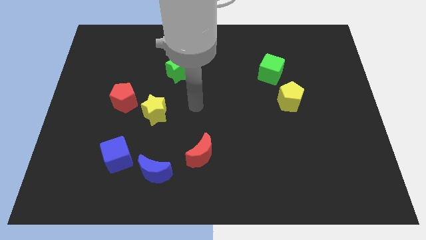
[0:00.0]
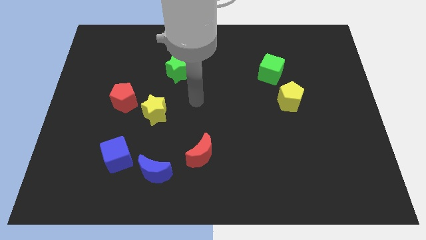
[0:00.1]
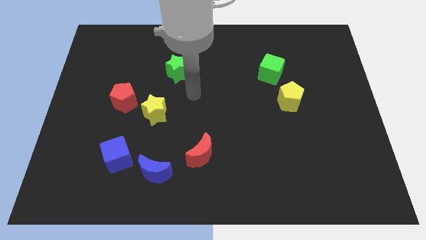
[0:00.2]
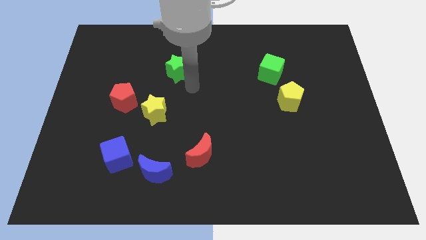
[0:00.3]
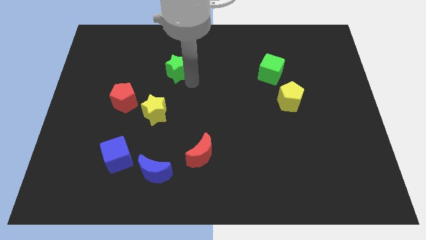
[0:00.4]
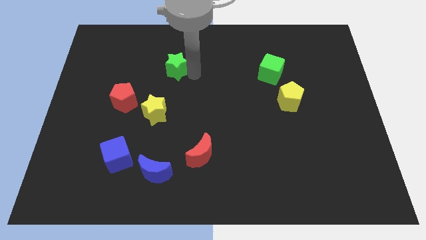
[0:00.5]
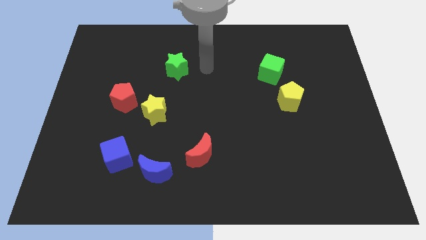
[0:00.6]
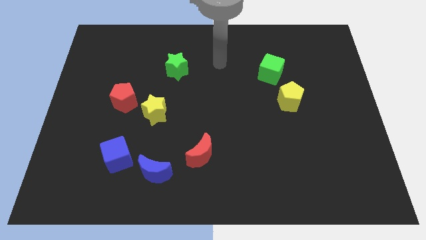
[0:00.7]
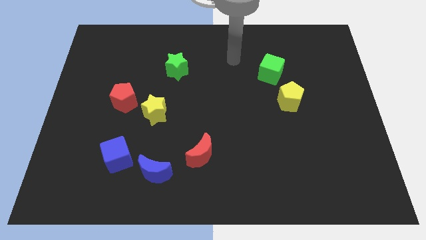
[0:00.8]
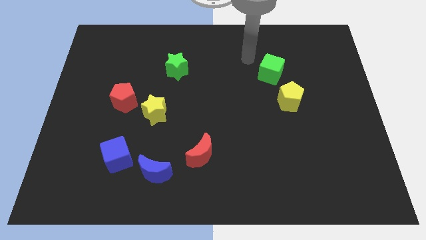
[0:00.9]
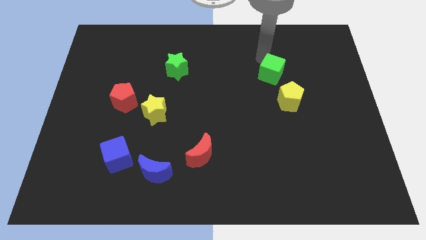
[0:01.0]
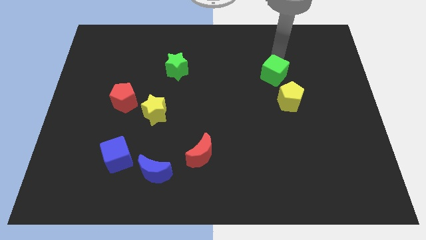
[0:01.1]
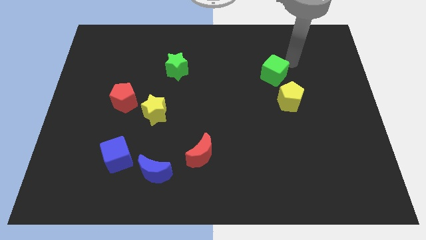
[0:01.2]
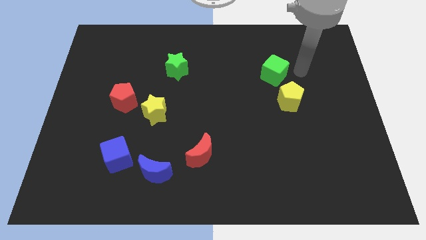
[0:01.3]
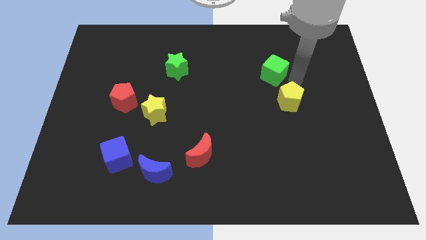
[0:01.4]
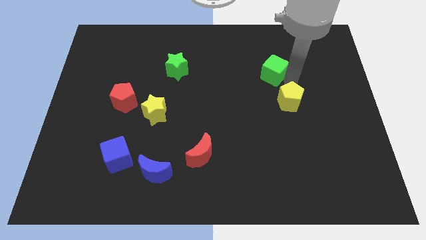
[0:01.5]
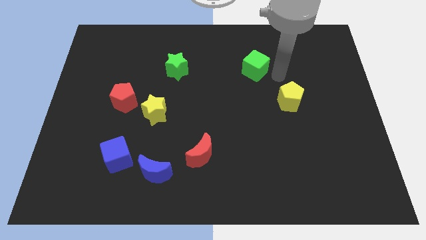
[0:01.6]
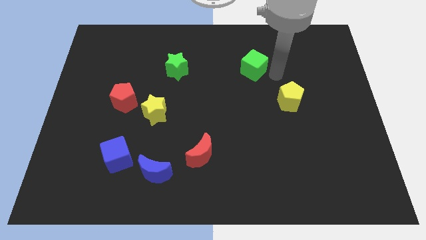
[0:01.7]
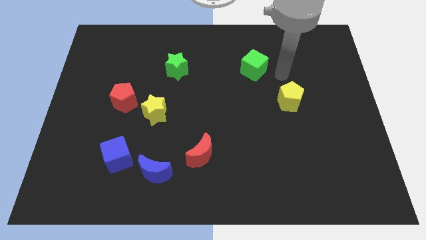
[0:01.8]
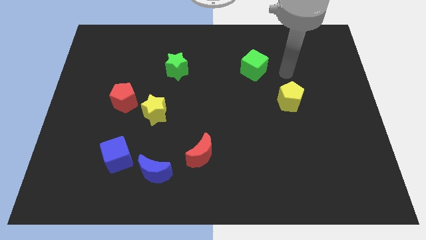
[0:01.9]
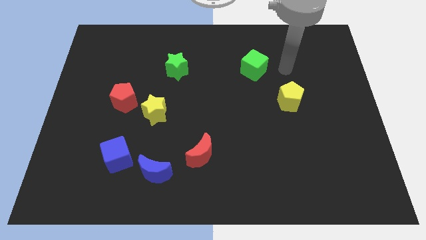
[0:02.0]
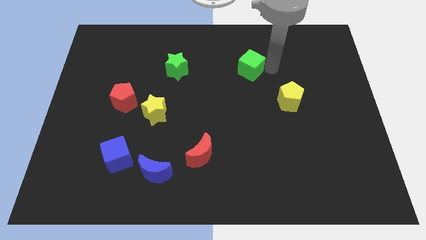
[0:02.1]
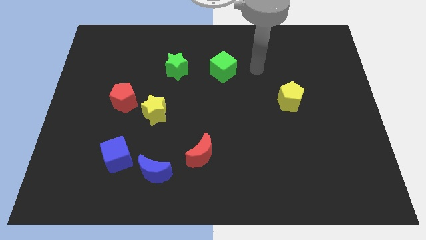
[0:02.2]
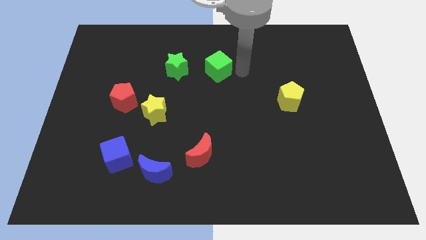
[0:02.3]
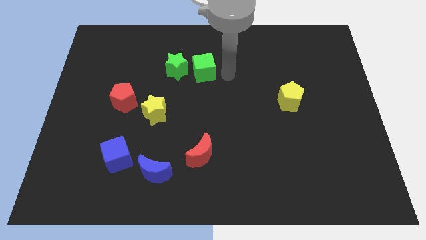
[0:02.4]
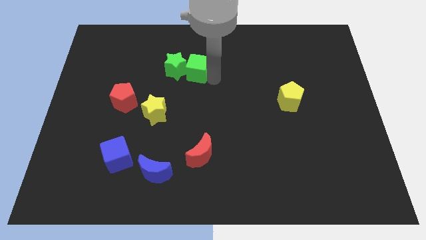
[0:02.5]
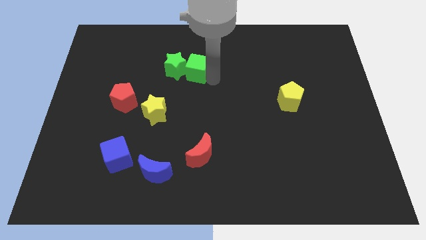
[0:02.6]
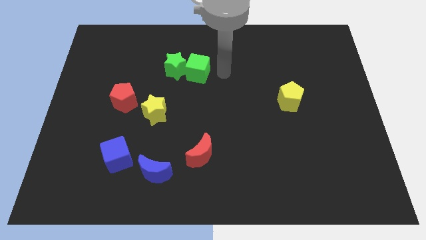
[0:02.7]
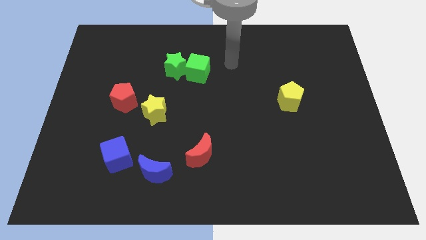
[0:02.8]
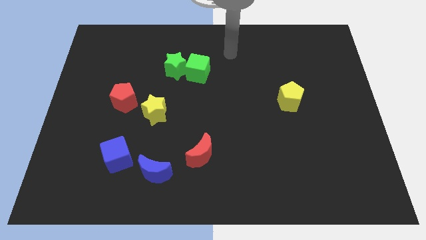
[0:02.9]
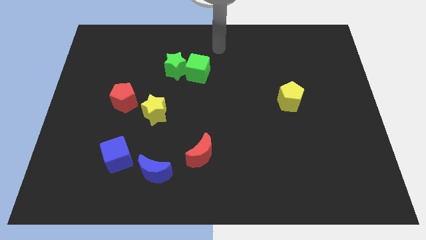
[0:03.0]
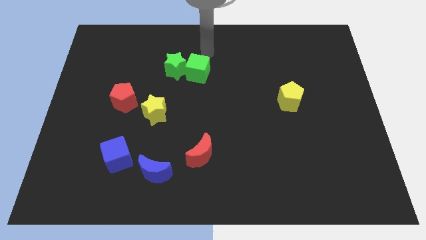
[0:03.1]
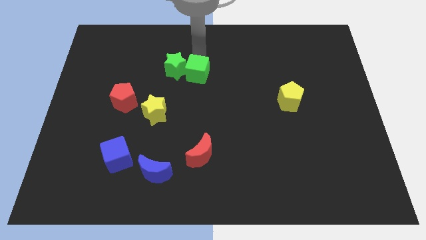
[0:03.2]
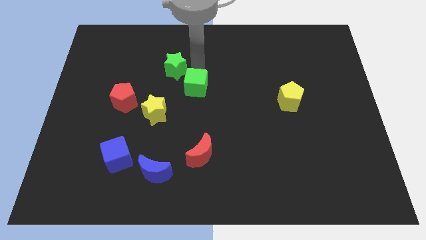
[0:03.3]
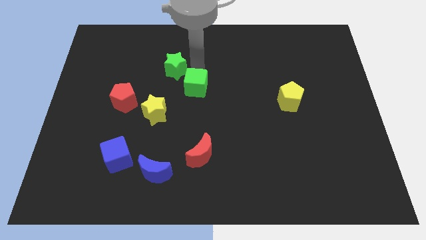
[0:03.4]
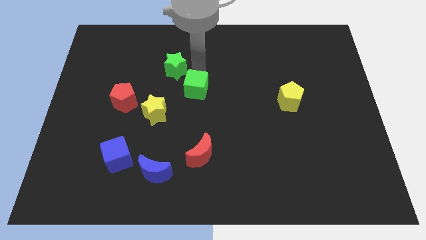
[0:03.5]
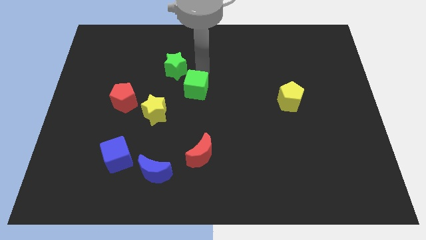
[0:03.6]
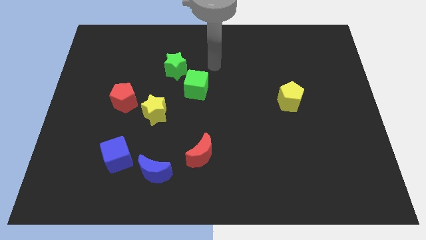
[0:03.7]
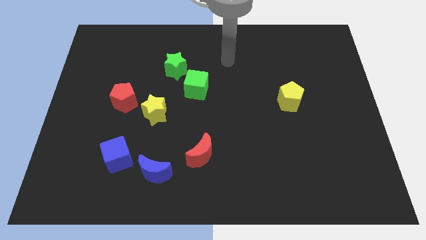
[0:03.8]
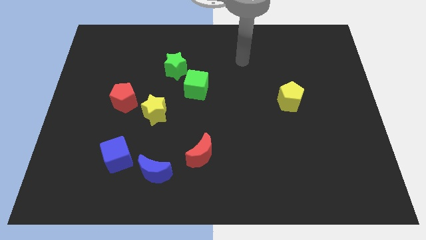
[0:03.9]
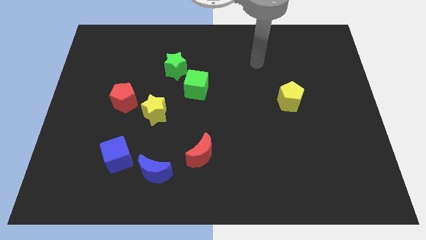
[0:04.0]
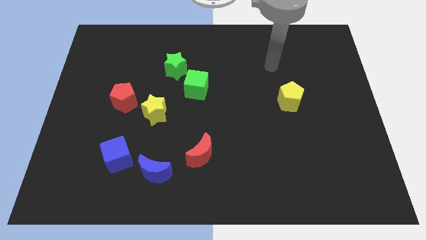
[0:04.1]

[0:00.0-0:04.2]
move green cube to the bottom right of green star

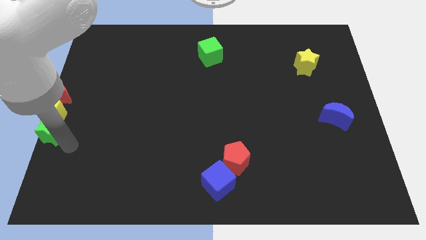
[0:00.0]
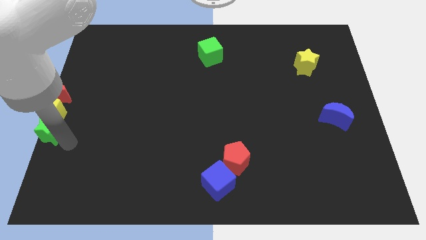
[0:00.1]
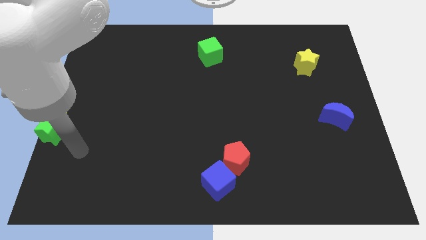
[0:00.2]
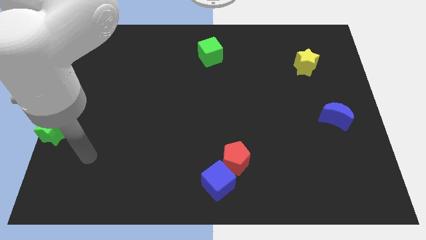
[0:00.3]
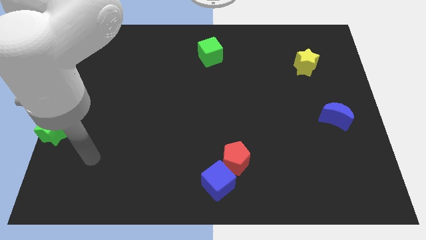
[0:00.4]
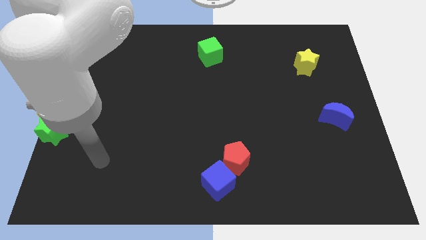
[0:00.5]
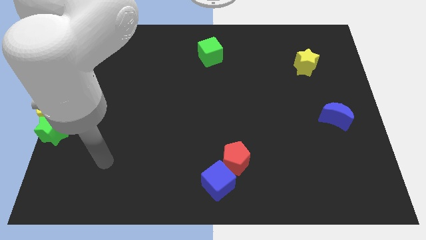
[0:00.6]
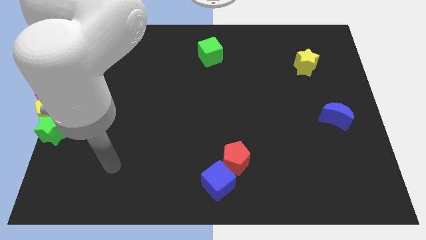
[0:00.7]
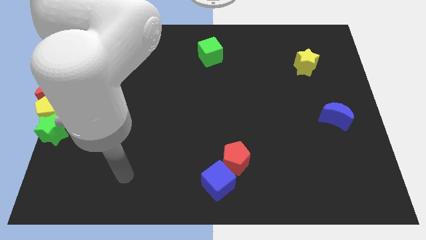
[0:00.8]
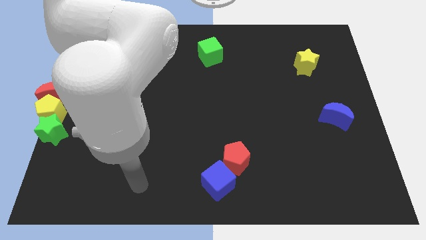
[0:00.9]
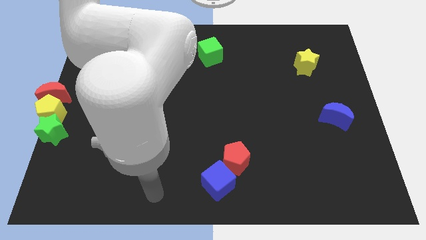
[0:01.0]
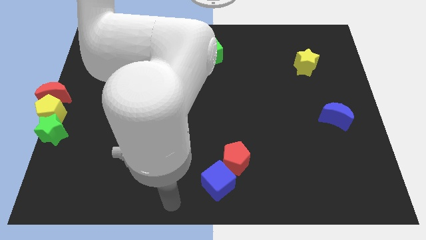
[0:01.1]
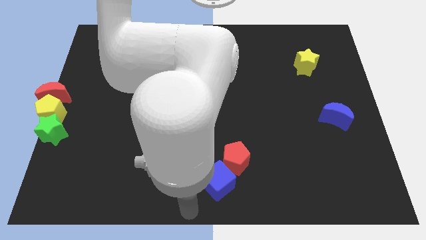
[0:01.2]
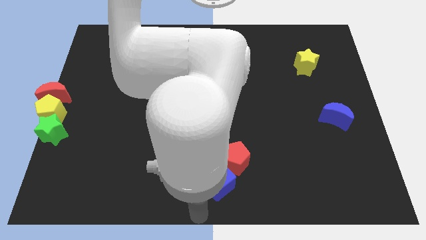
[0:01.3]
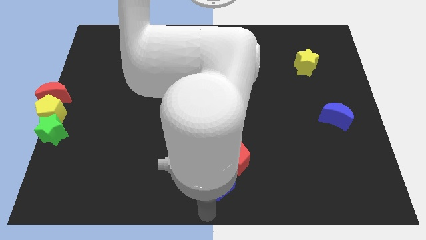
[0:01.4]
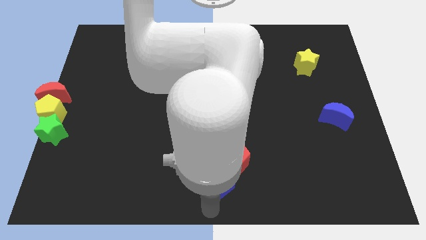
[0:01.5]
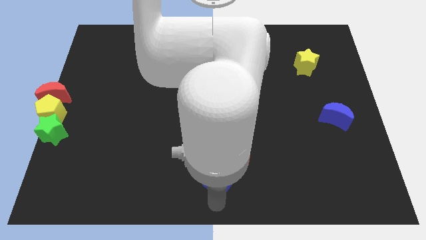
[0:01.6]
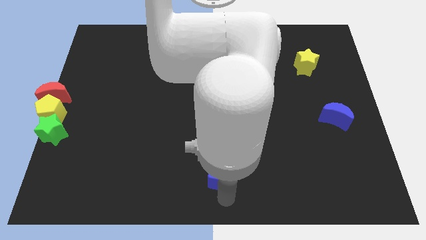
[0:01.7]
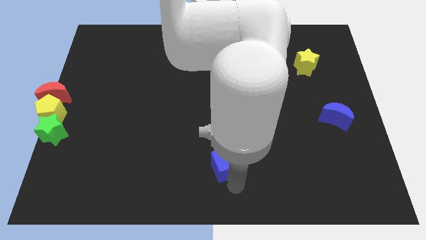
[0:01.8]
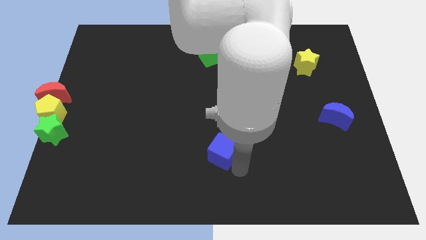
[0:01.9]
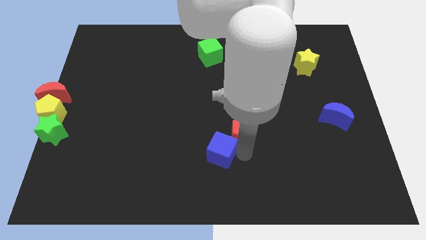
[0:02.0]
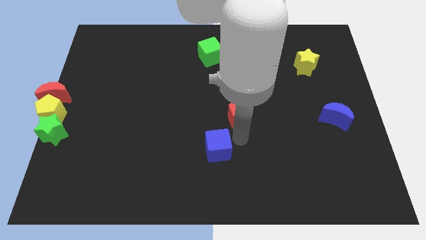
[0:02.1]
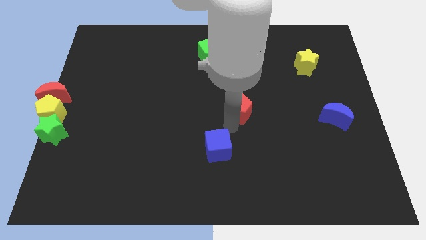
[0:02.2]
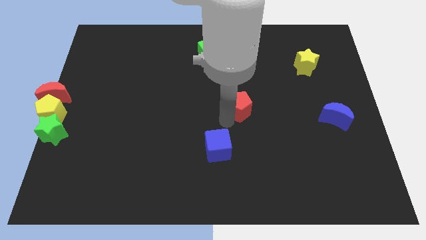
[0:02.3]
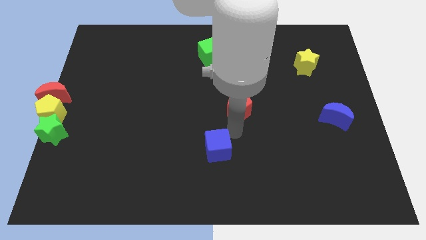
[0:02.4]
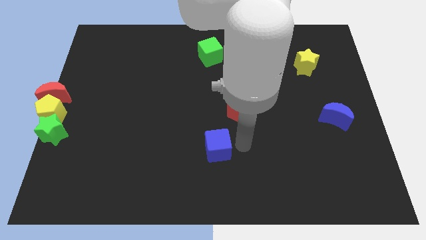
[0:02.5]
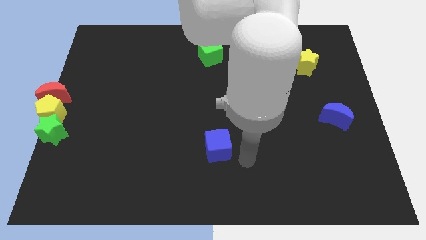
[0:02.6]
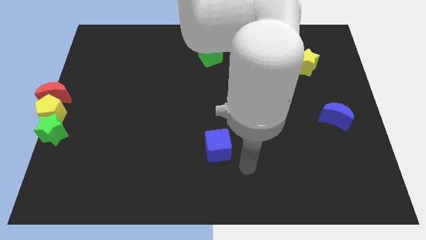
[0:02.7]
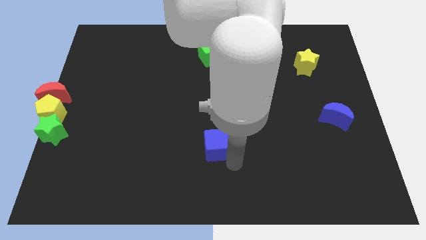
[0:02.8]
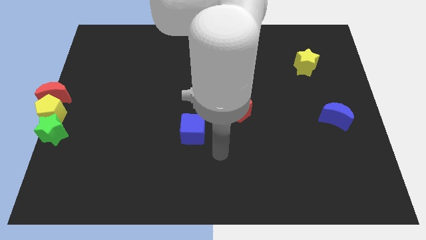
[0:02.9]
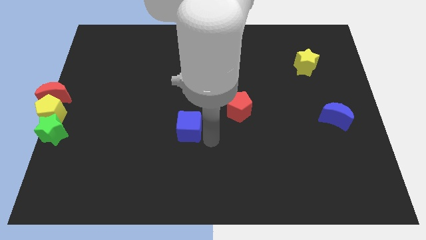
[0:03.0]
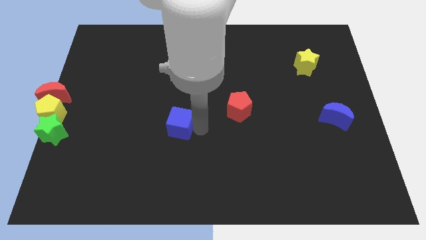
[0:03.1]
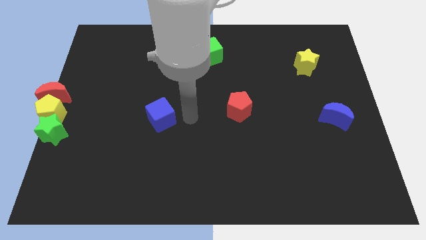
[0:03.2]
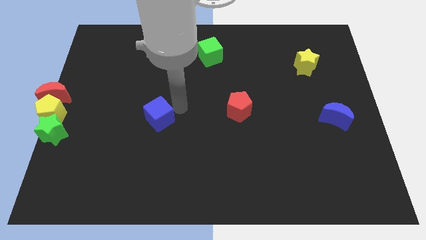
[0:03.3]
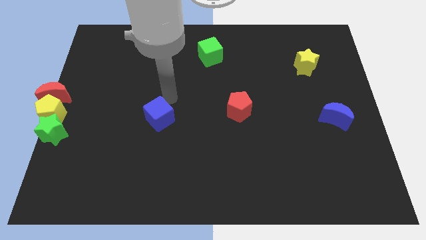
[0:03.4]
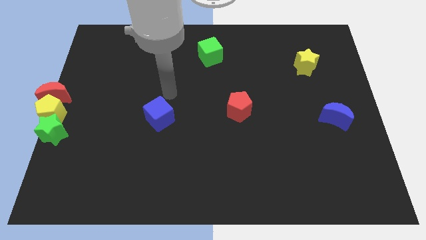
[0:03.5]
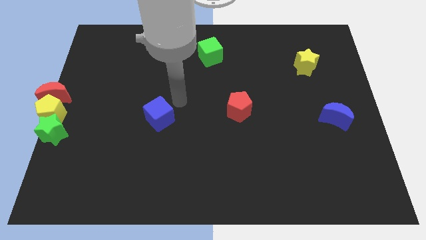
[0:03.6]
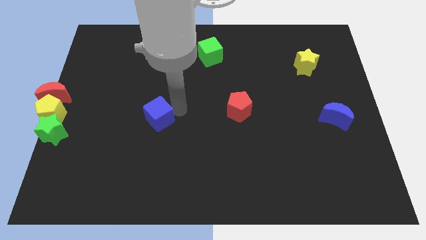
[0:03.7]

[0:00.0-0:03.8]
slide the blue cube to the right side of the vertical line of blocks

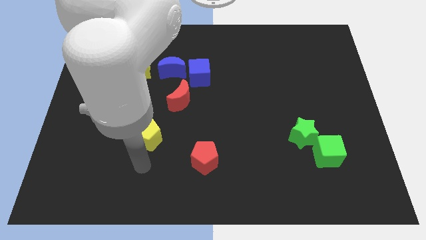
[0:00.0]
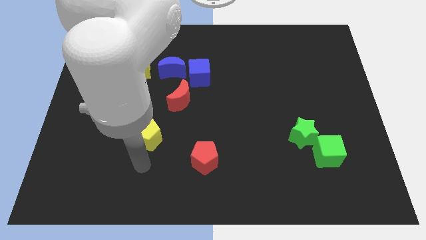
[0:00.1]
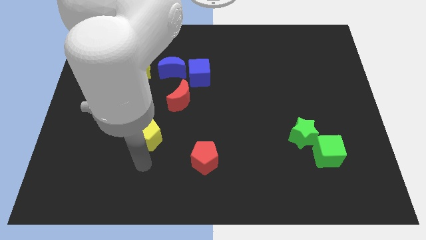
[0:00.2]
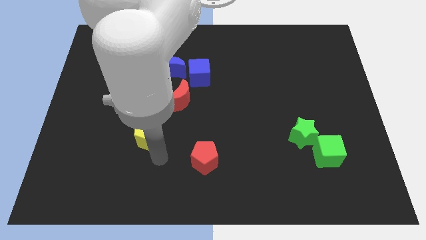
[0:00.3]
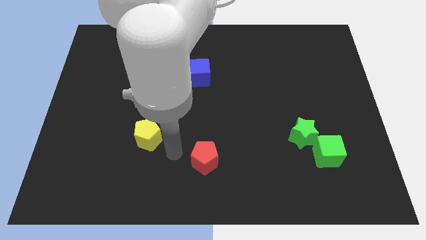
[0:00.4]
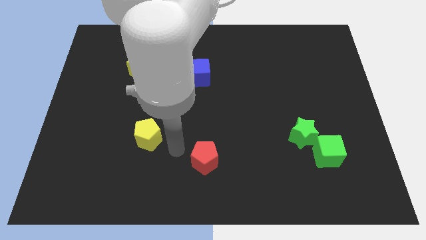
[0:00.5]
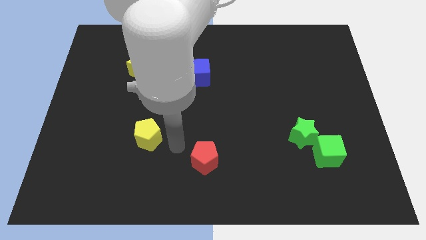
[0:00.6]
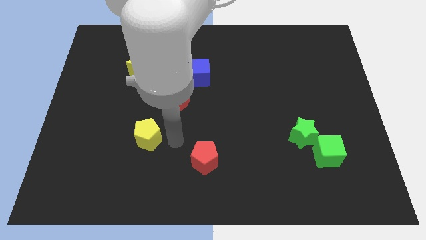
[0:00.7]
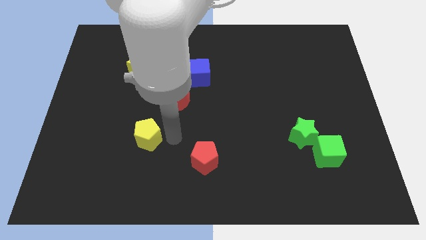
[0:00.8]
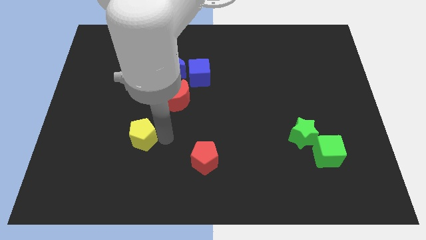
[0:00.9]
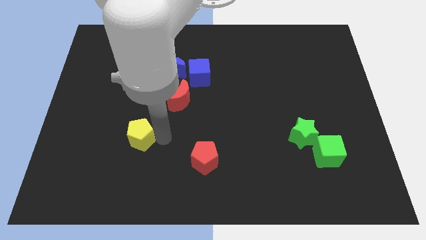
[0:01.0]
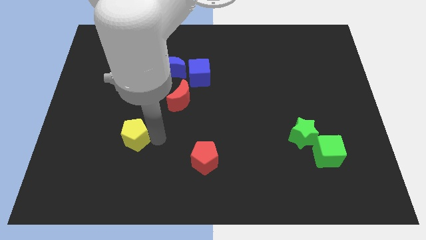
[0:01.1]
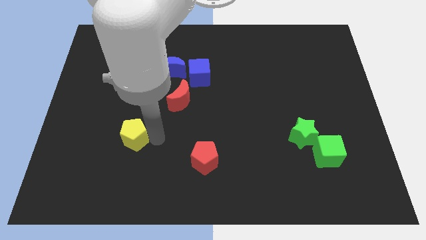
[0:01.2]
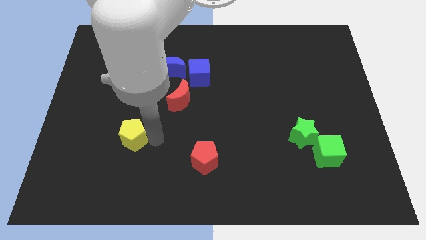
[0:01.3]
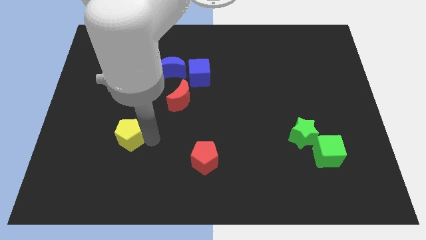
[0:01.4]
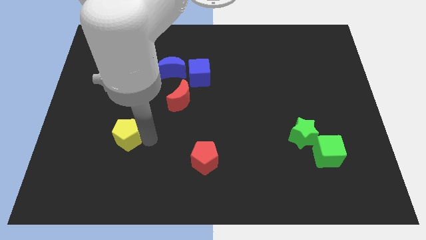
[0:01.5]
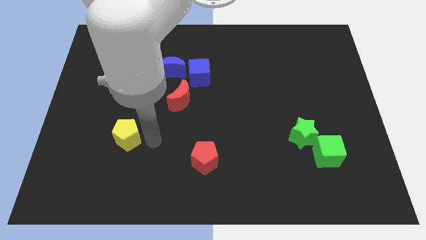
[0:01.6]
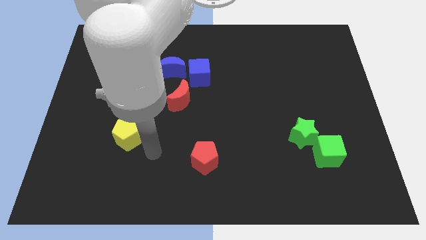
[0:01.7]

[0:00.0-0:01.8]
move the yellow pentagon to the left of the board
